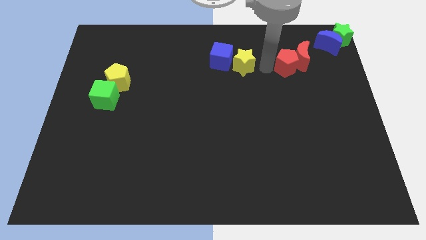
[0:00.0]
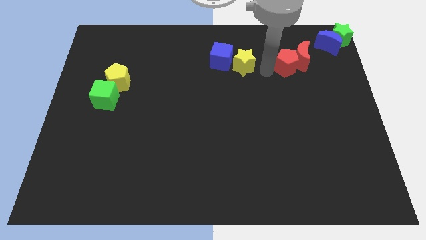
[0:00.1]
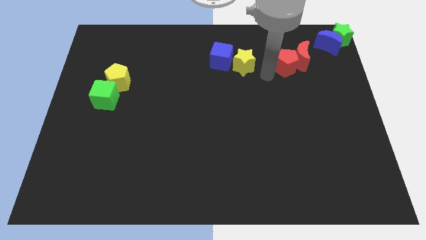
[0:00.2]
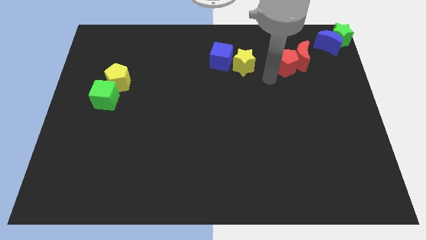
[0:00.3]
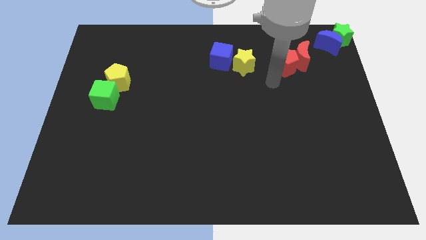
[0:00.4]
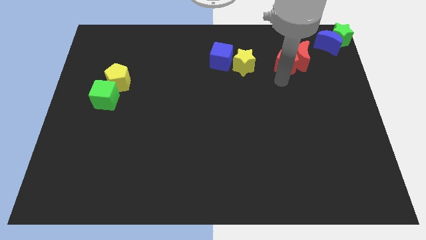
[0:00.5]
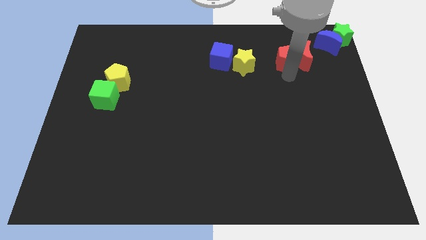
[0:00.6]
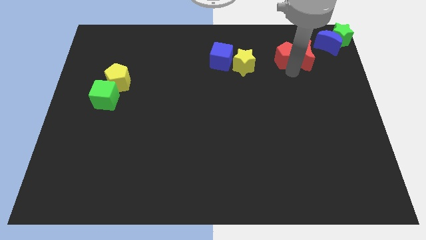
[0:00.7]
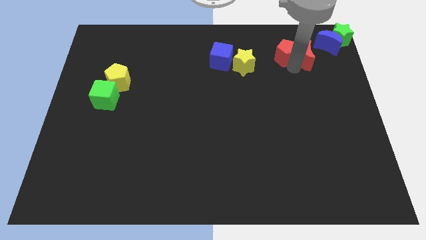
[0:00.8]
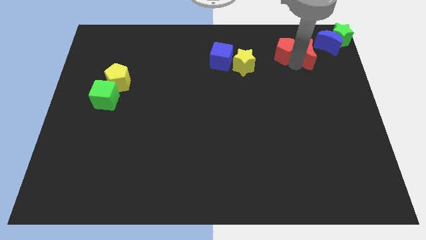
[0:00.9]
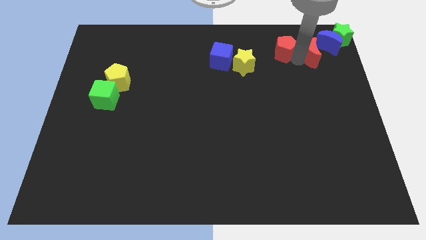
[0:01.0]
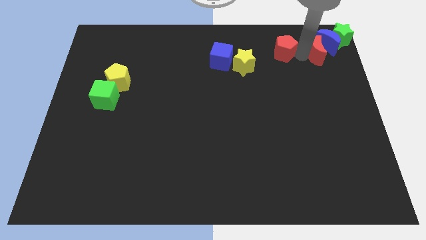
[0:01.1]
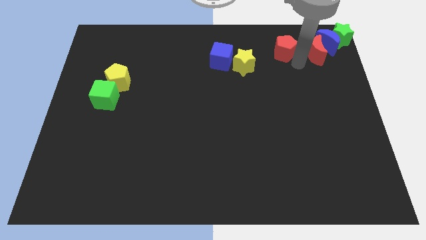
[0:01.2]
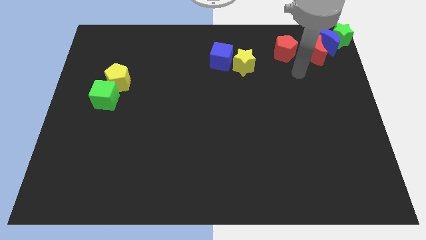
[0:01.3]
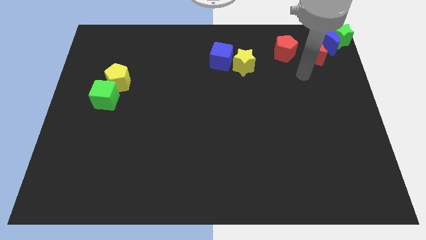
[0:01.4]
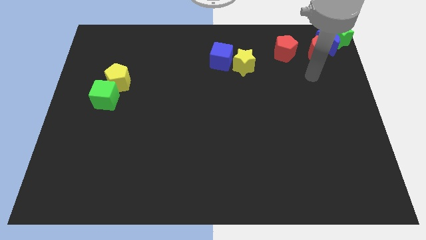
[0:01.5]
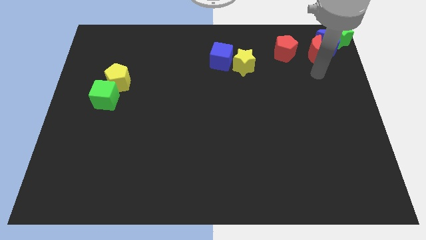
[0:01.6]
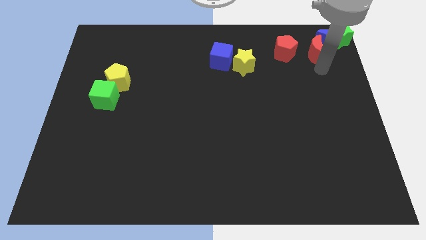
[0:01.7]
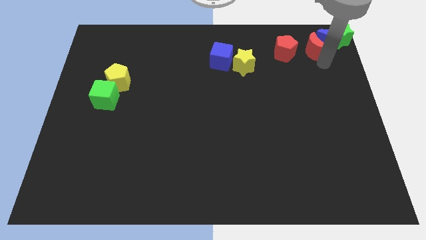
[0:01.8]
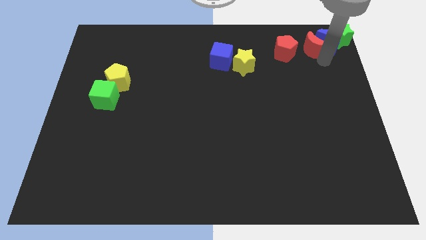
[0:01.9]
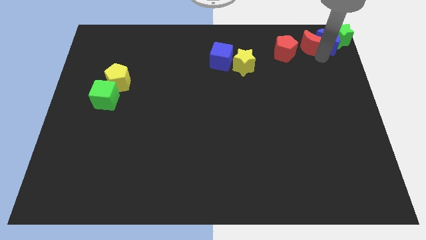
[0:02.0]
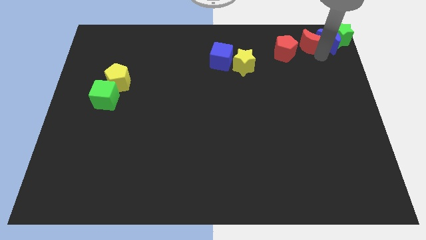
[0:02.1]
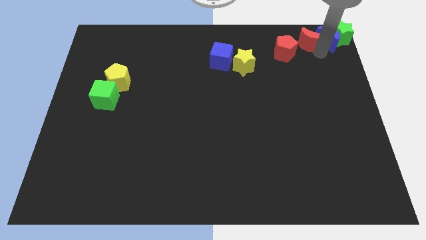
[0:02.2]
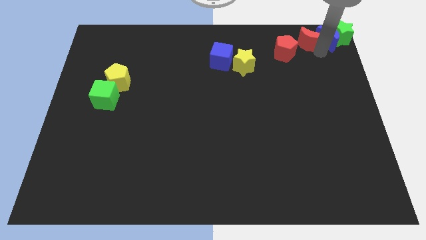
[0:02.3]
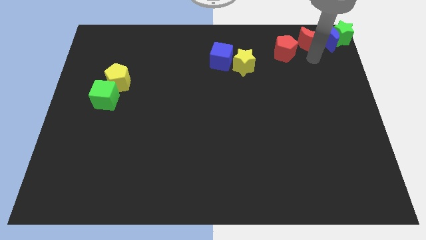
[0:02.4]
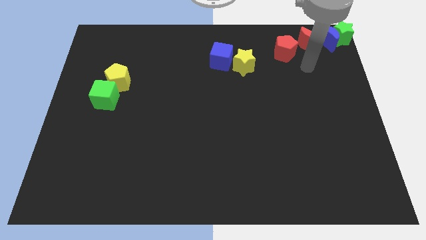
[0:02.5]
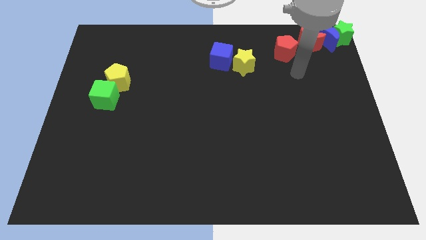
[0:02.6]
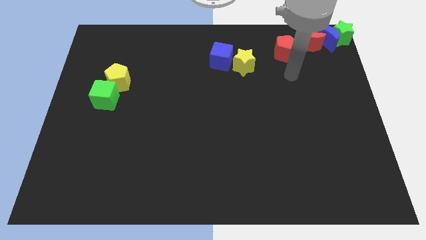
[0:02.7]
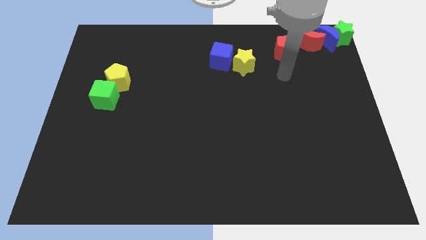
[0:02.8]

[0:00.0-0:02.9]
push red crescent into blue crescent

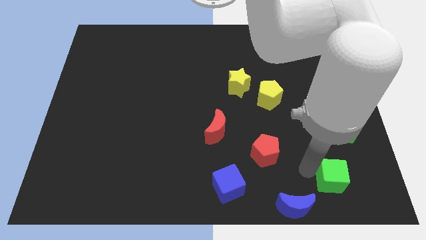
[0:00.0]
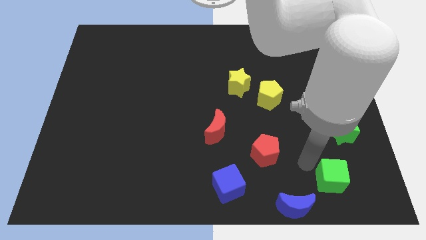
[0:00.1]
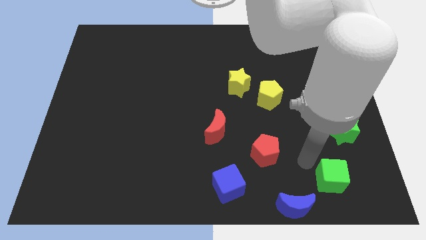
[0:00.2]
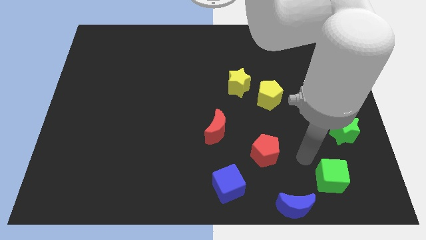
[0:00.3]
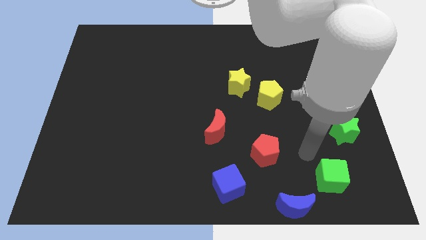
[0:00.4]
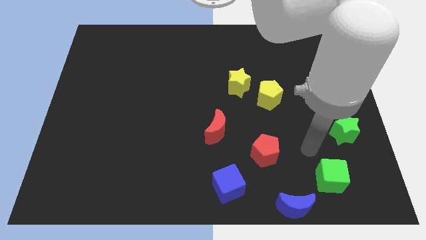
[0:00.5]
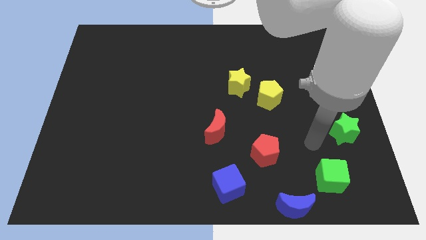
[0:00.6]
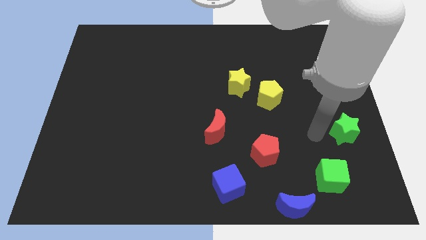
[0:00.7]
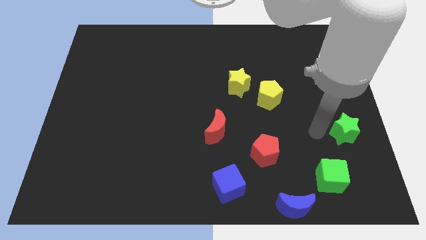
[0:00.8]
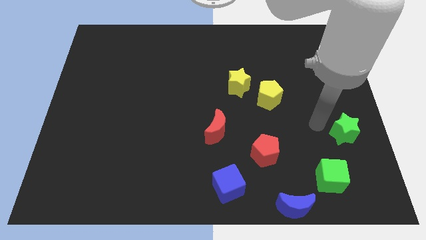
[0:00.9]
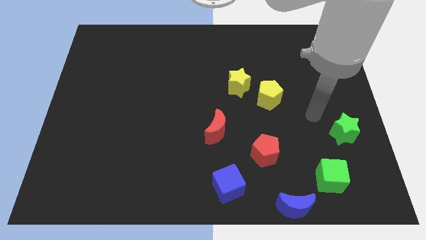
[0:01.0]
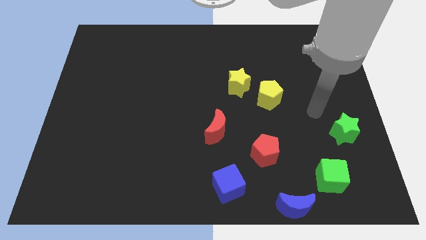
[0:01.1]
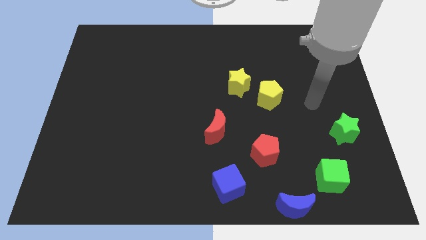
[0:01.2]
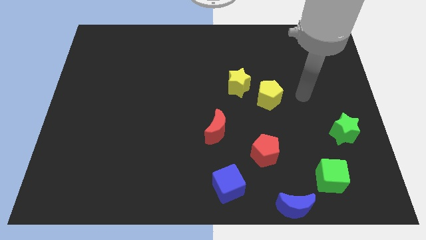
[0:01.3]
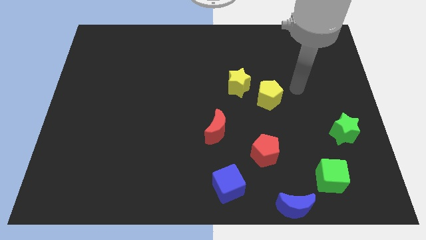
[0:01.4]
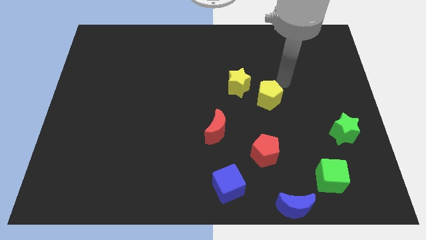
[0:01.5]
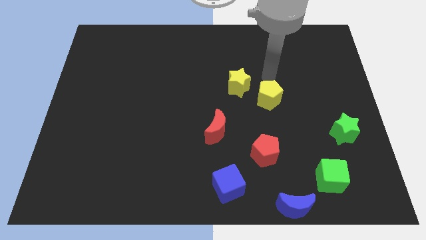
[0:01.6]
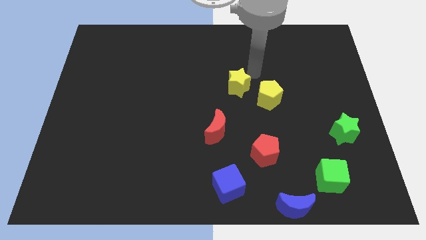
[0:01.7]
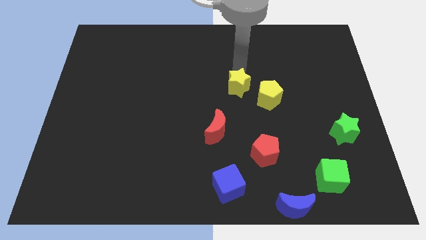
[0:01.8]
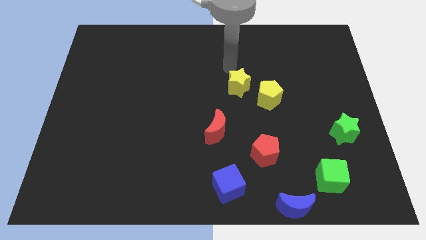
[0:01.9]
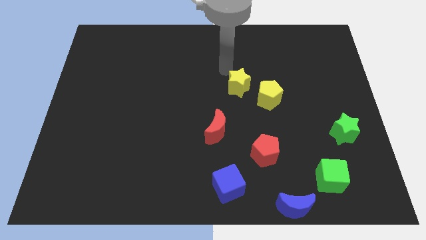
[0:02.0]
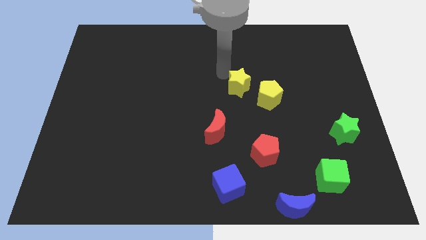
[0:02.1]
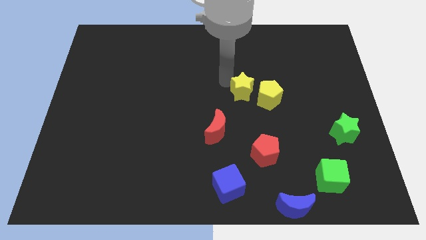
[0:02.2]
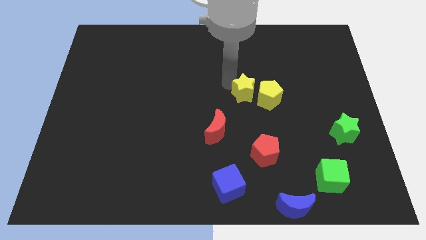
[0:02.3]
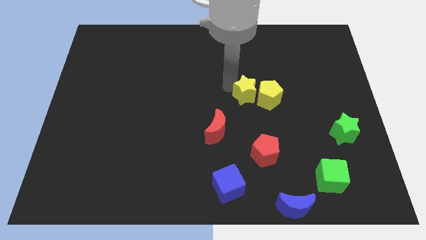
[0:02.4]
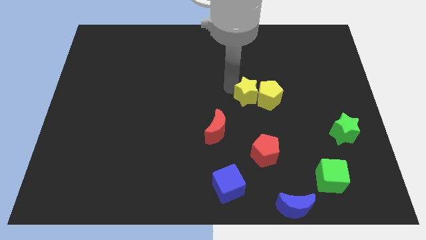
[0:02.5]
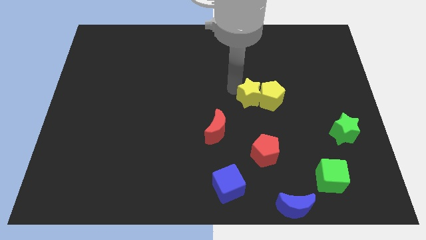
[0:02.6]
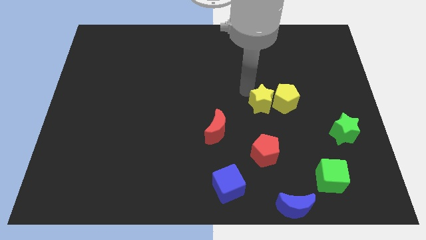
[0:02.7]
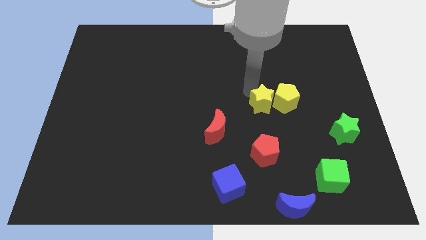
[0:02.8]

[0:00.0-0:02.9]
place the yellow star to the left of the yellow pentagon

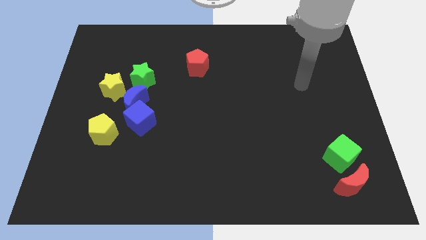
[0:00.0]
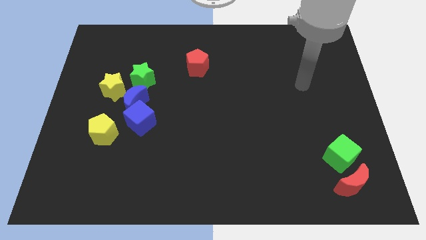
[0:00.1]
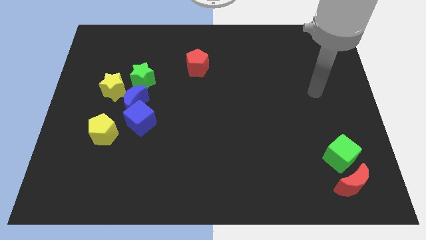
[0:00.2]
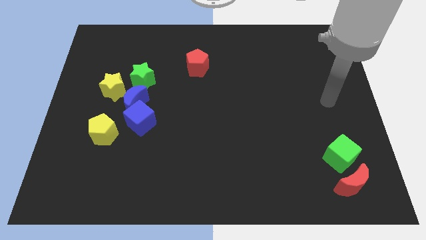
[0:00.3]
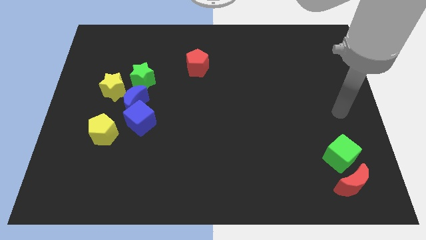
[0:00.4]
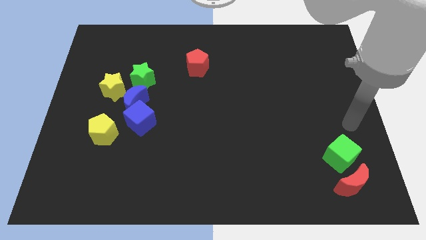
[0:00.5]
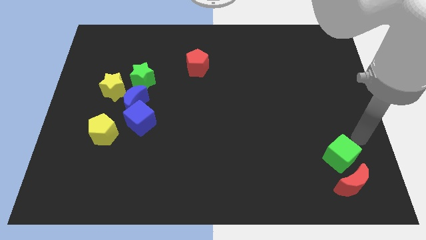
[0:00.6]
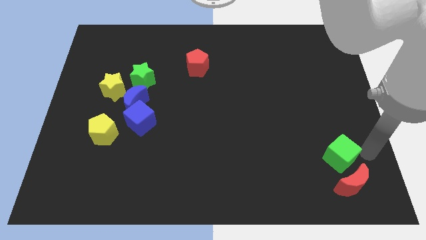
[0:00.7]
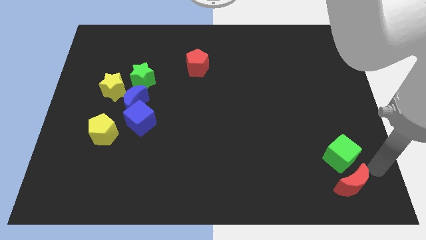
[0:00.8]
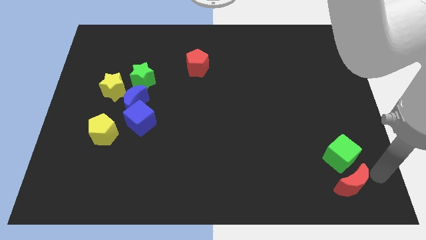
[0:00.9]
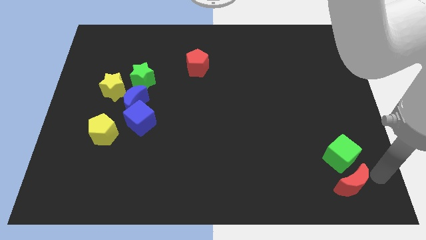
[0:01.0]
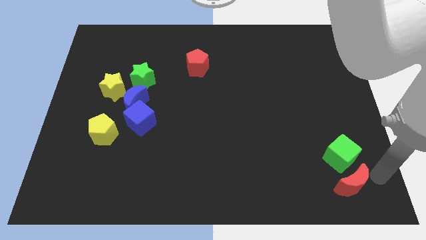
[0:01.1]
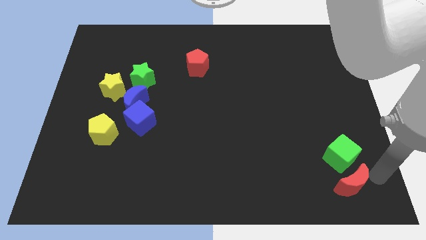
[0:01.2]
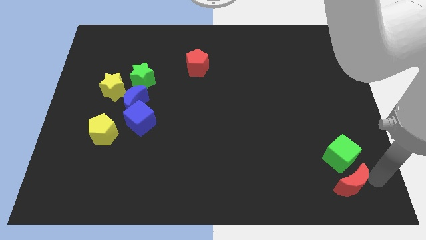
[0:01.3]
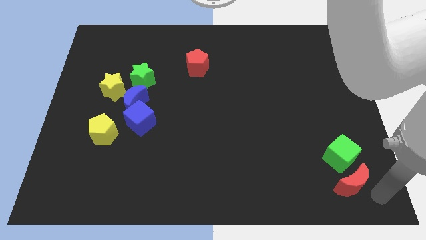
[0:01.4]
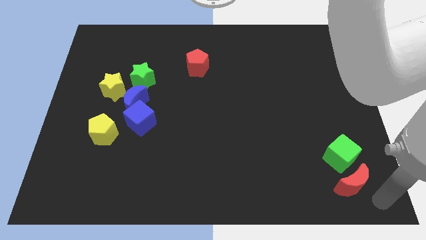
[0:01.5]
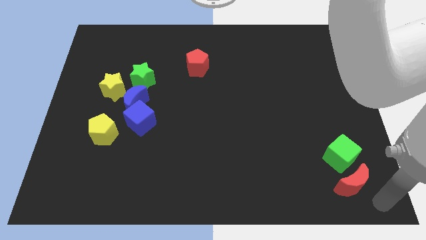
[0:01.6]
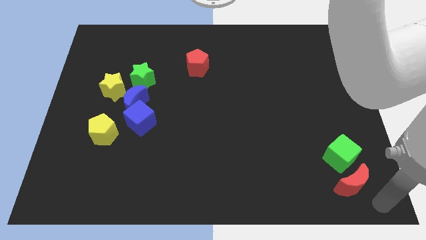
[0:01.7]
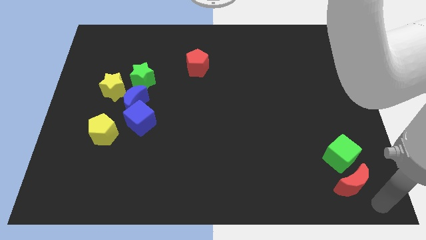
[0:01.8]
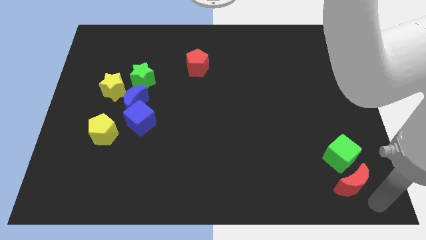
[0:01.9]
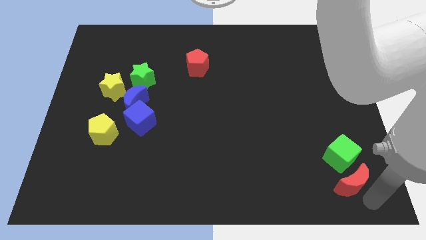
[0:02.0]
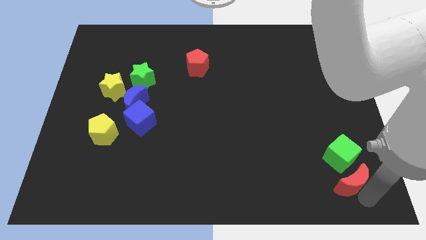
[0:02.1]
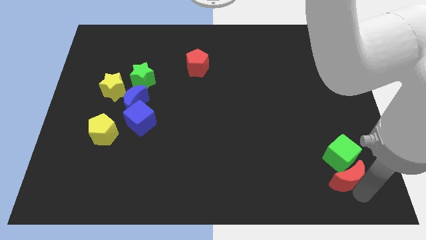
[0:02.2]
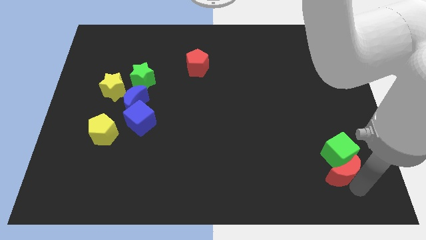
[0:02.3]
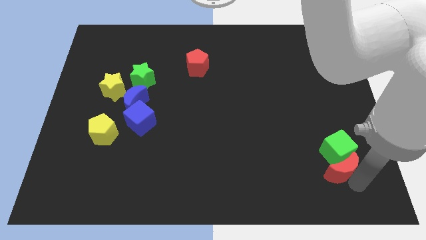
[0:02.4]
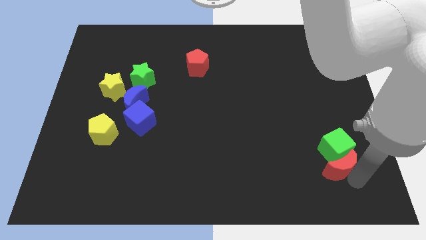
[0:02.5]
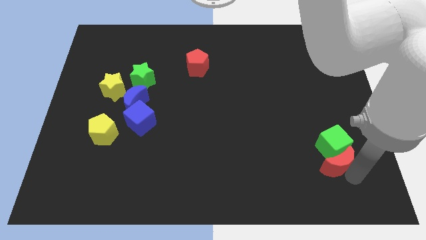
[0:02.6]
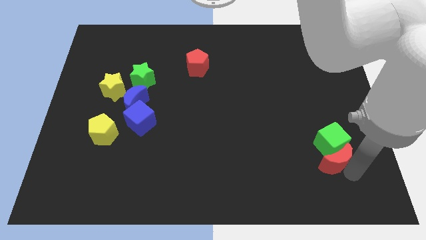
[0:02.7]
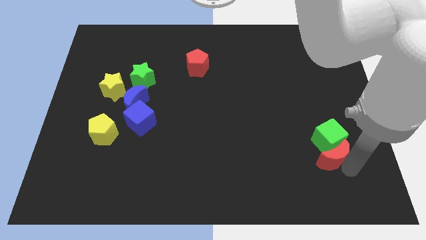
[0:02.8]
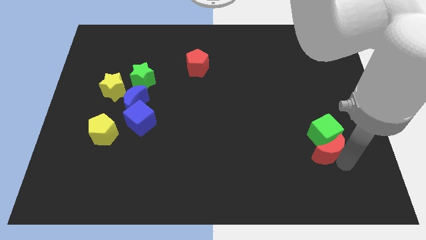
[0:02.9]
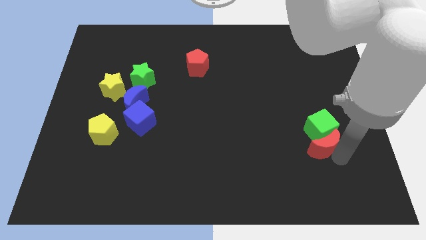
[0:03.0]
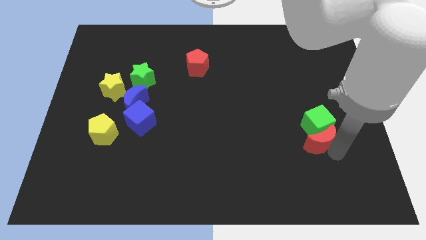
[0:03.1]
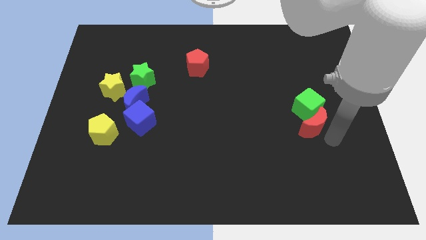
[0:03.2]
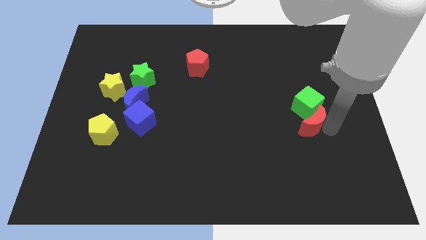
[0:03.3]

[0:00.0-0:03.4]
push the green cube and red moon vertically towards the center of the board
